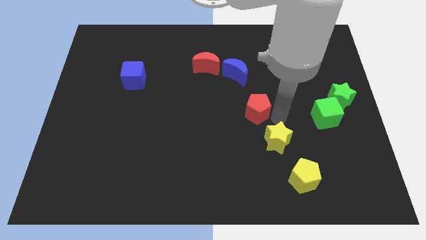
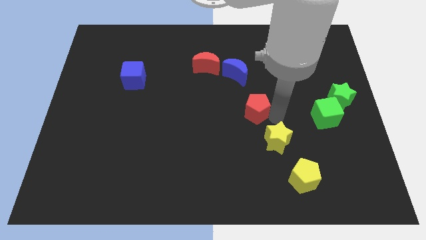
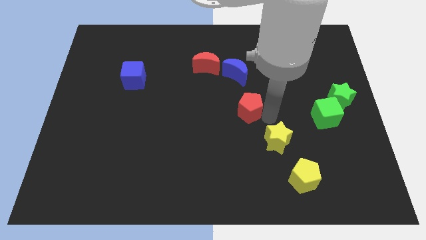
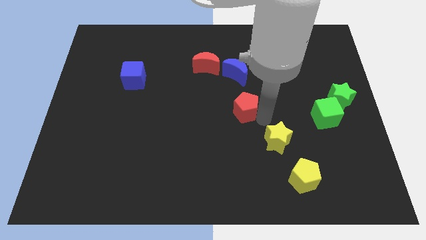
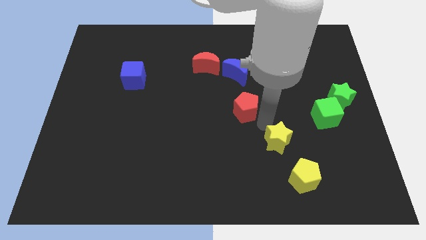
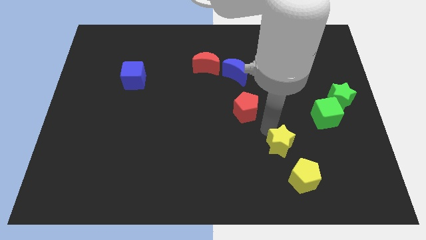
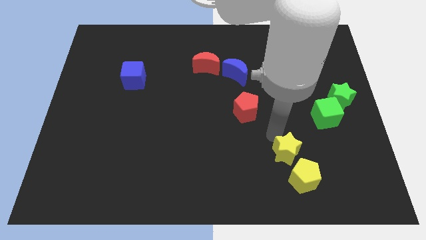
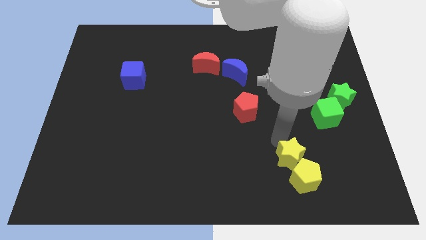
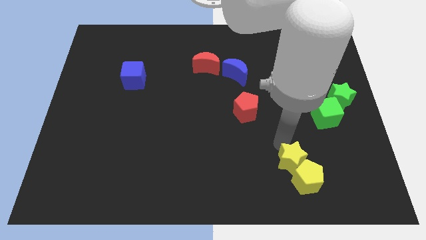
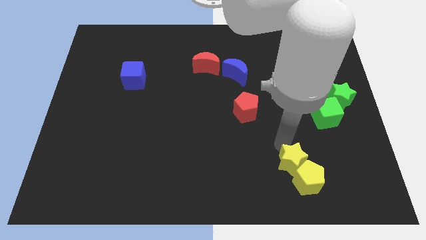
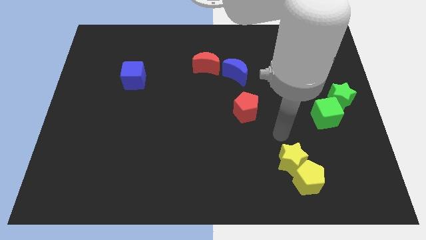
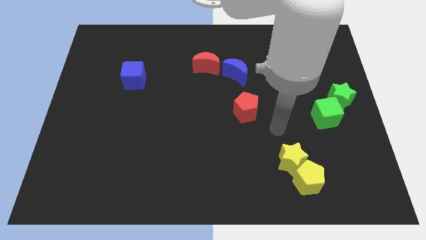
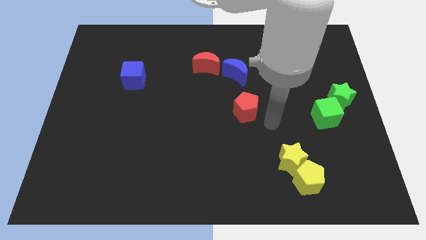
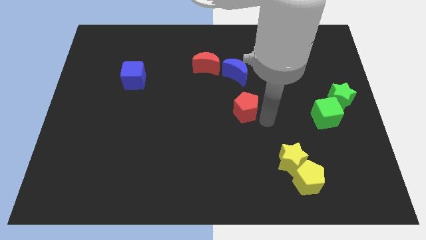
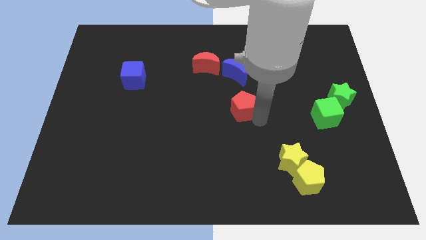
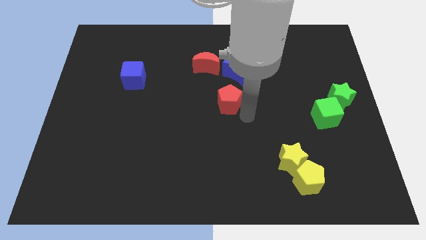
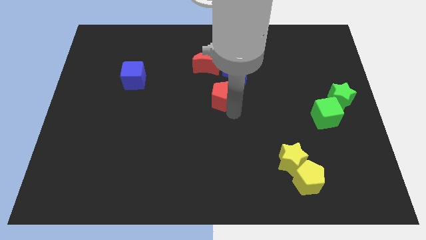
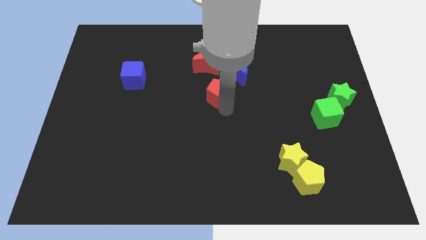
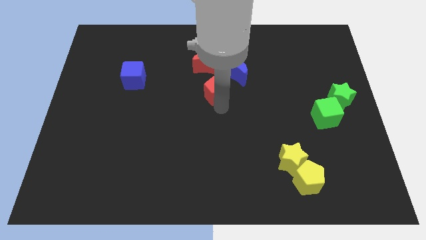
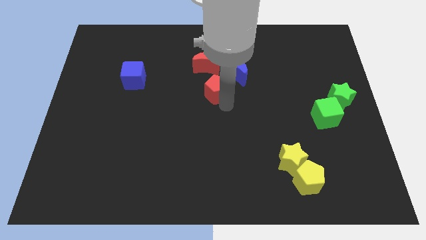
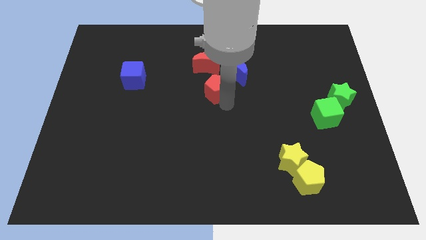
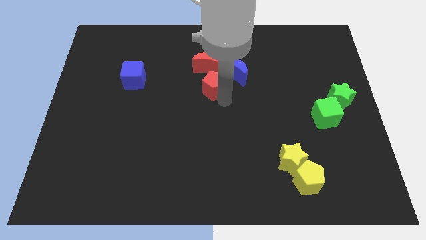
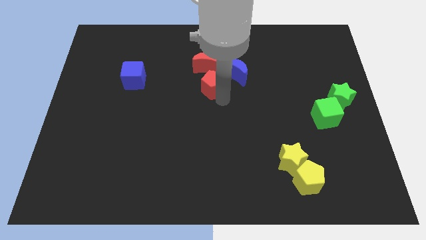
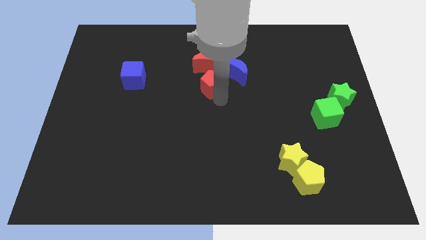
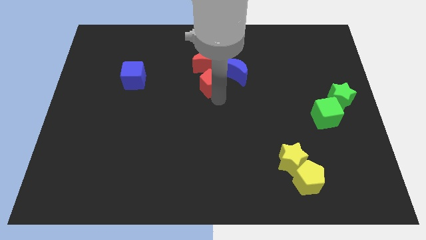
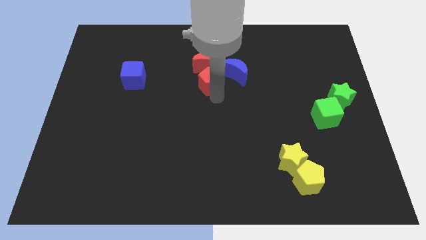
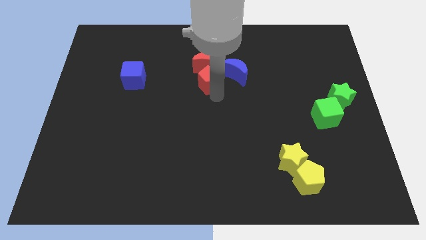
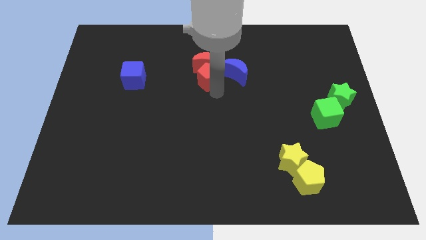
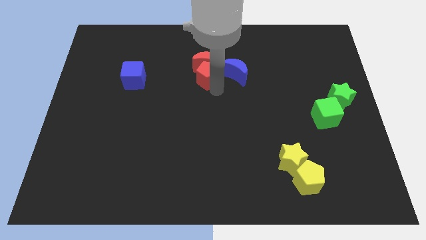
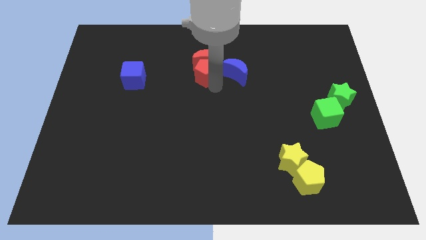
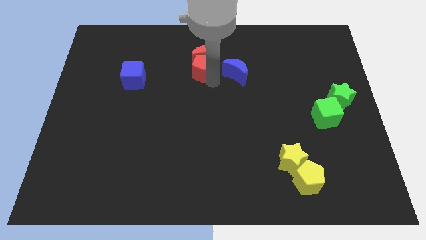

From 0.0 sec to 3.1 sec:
push red pentagon towards red crescent

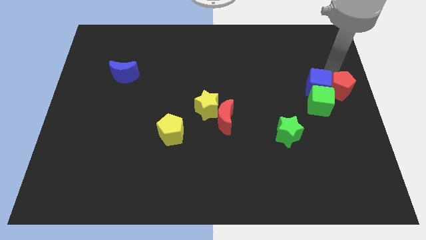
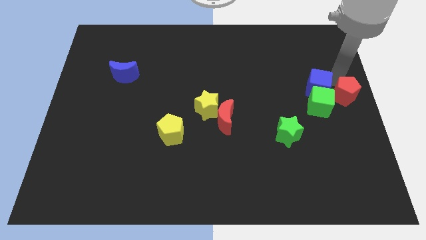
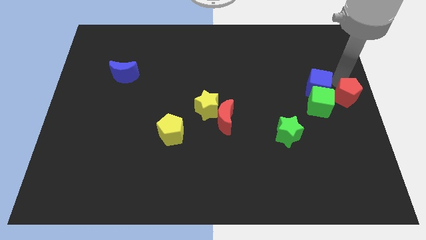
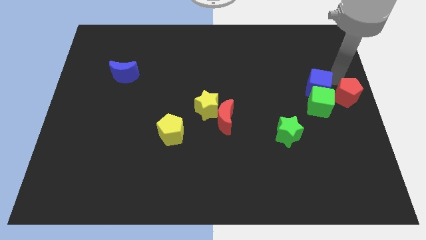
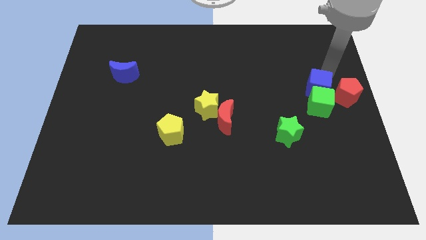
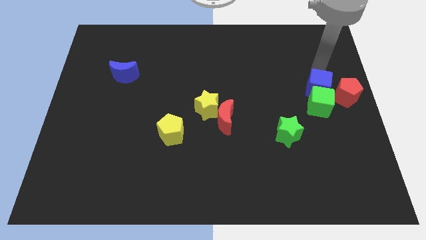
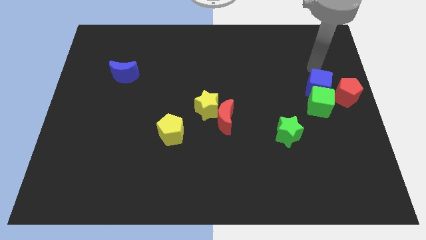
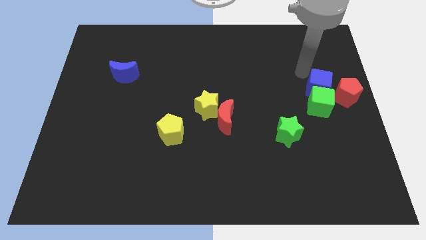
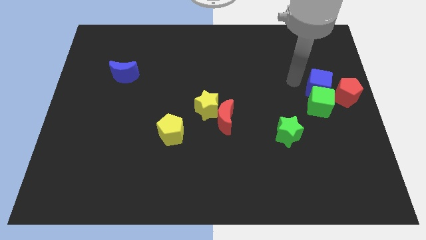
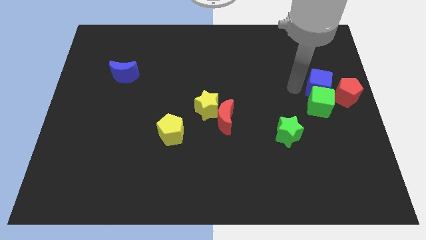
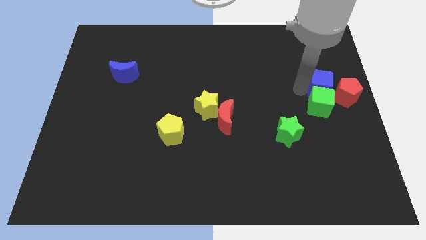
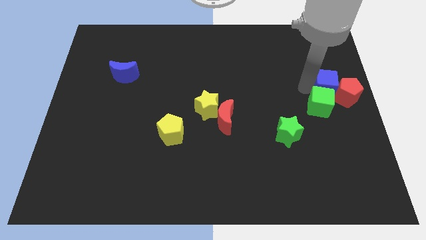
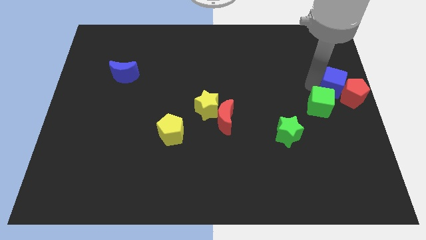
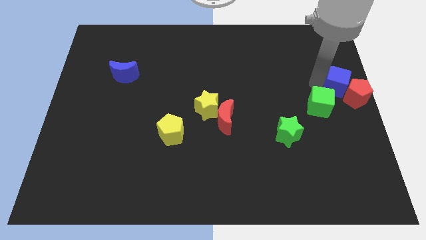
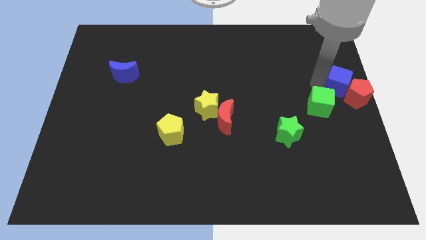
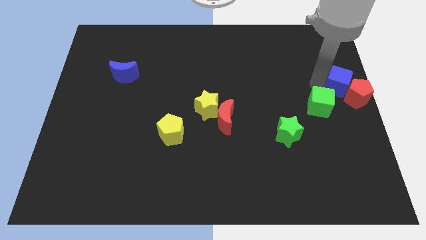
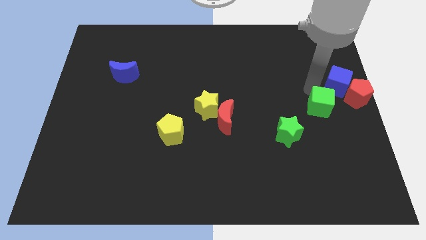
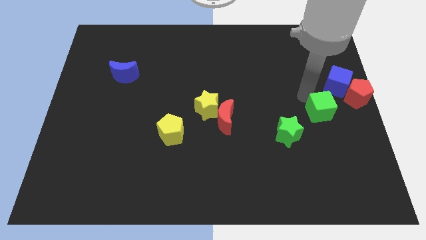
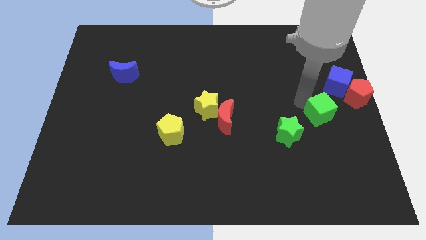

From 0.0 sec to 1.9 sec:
separate green cube from blue cube

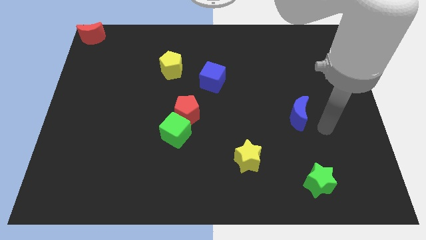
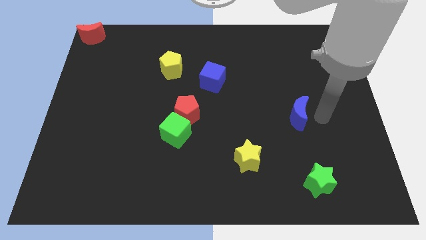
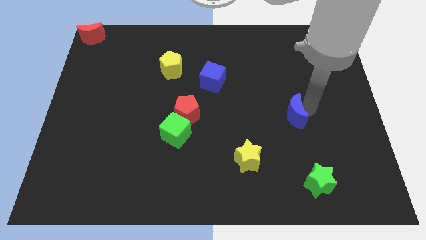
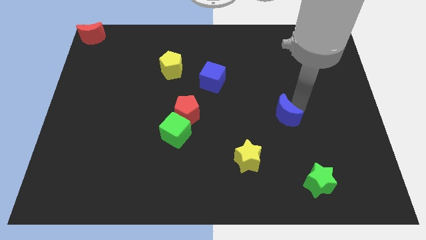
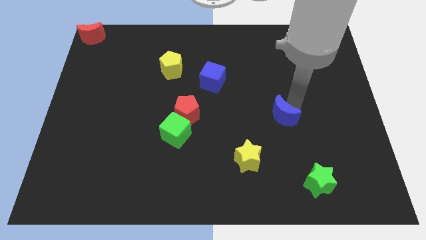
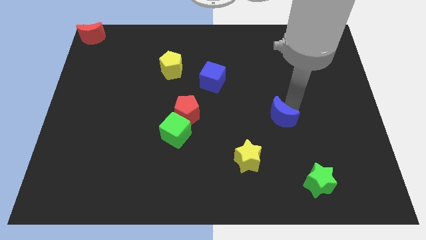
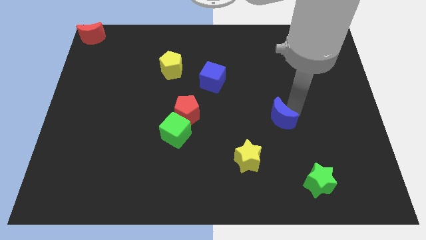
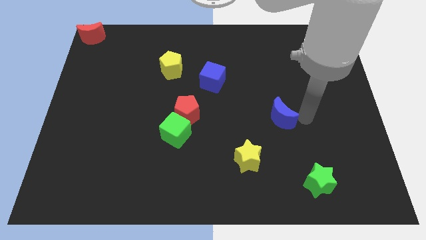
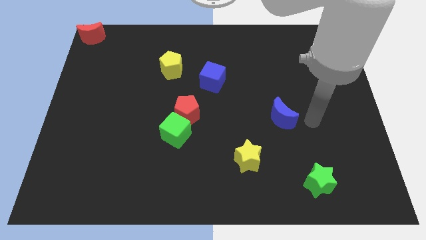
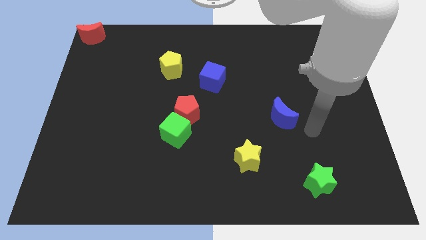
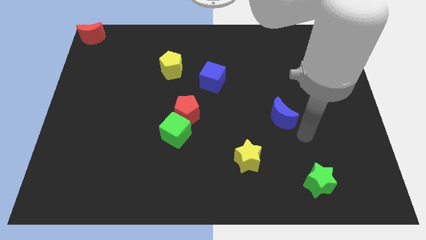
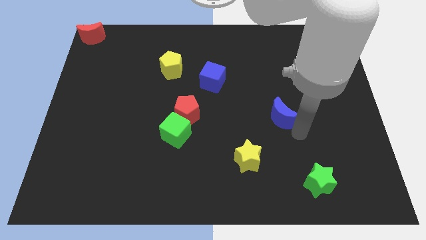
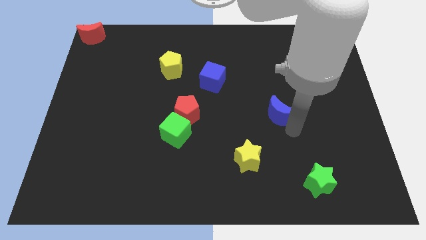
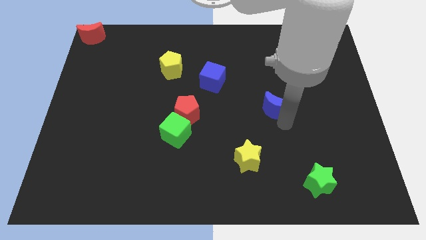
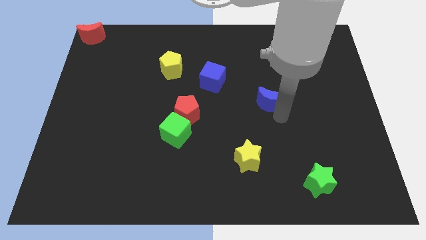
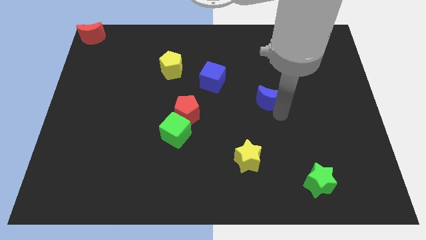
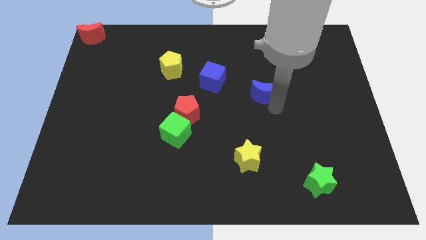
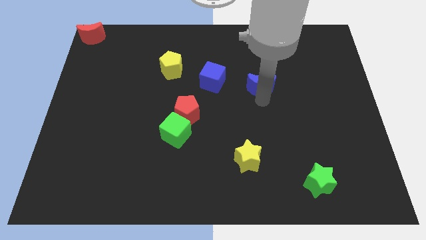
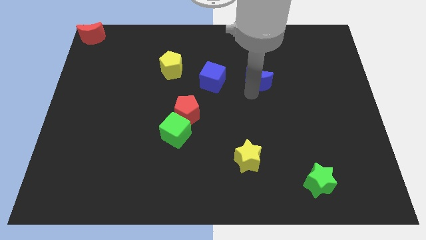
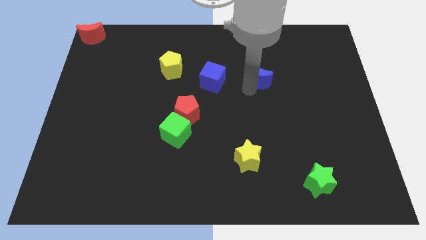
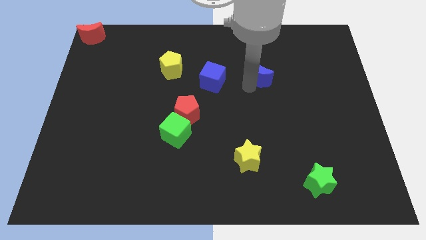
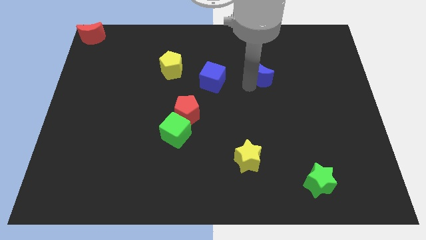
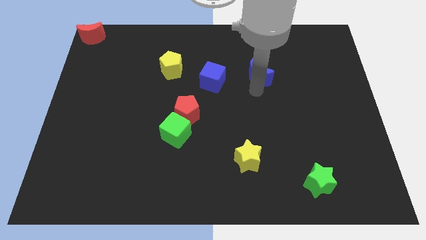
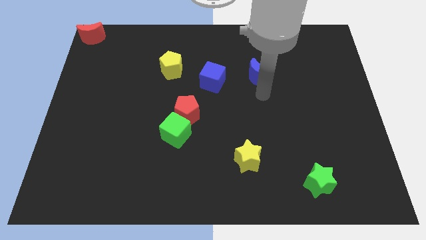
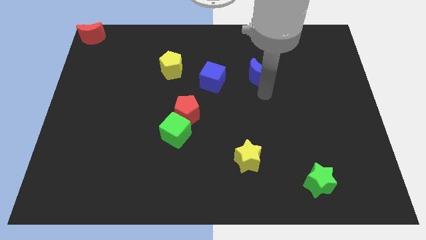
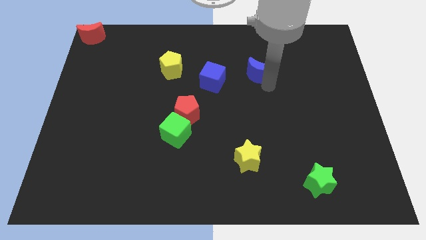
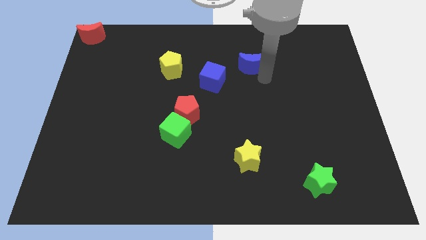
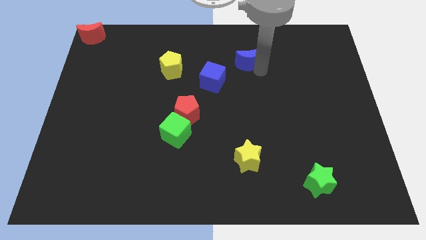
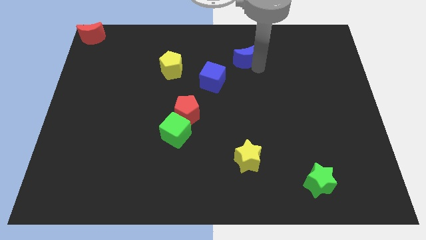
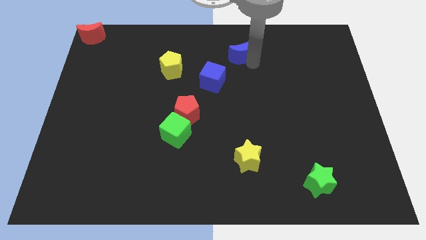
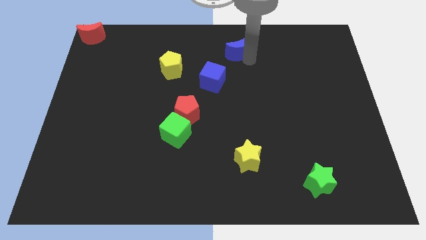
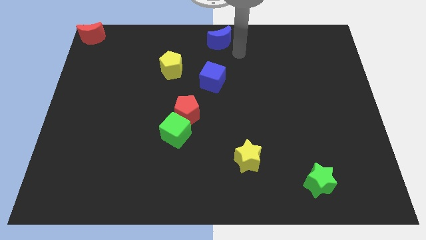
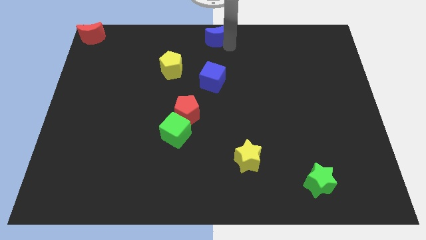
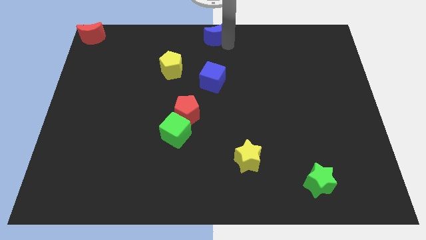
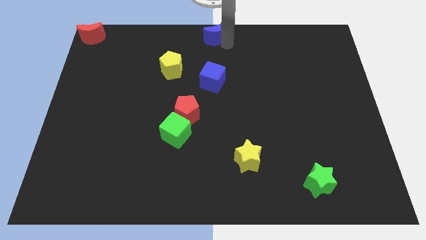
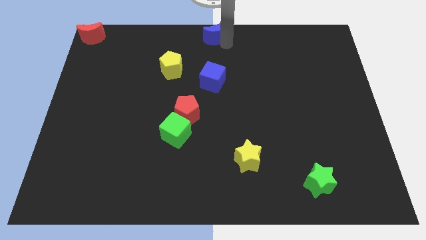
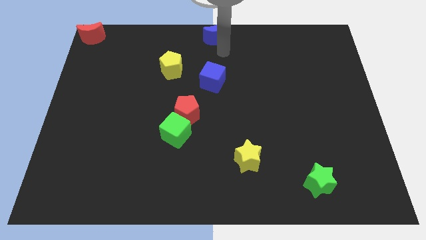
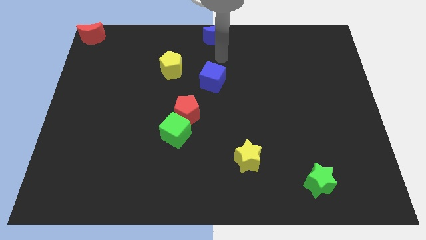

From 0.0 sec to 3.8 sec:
move the blue moon vertically to the top side of the blue cube

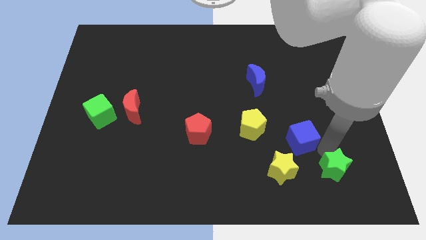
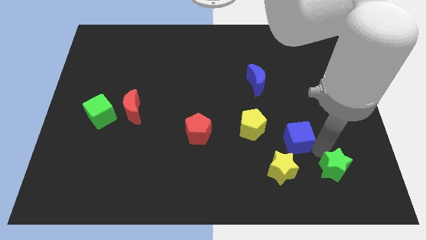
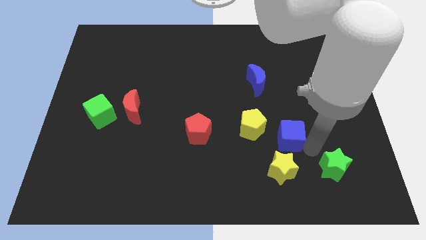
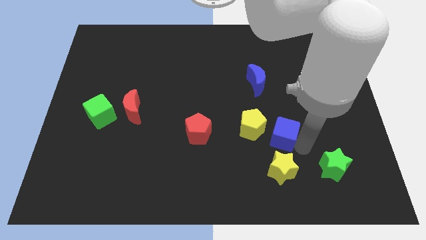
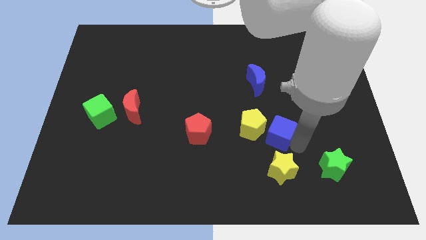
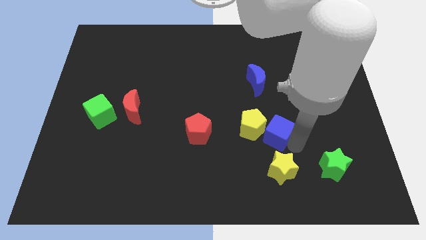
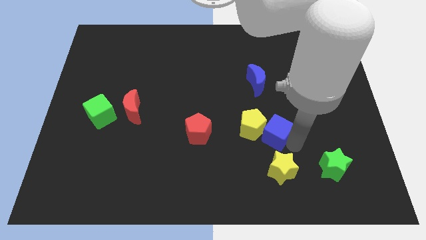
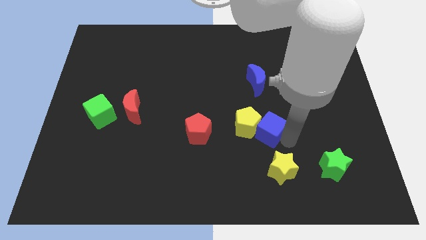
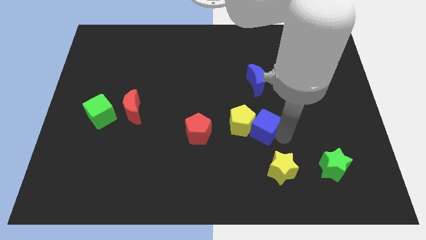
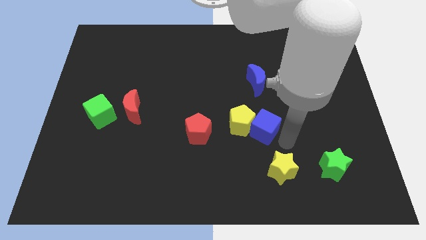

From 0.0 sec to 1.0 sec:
push the blue cube into the yellow pentagon
